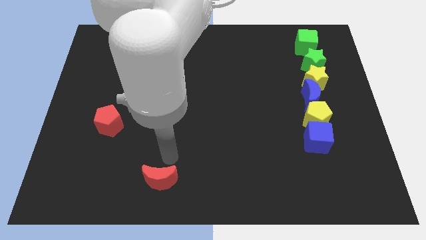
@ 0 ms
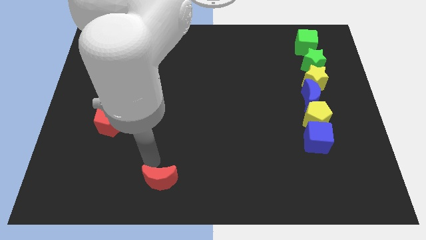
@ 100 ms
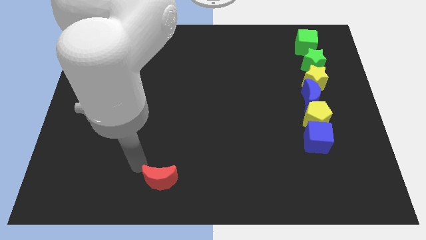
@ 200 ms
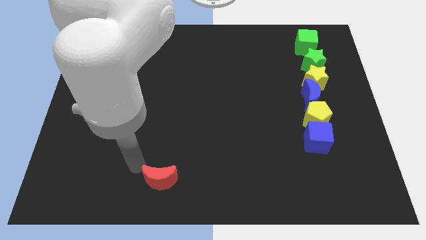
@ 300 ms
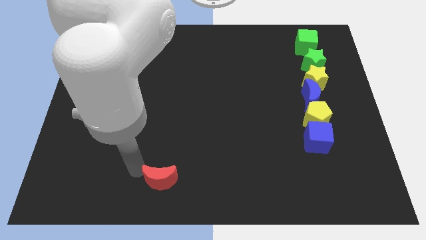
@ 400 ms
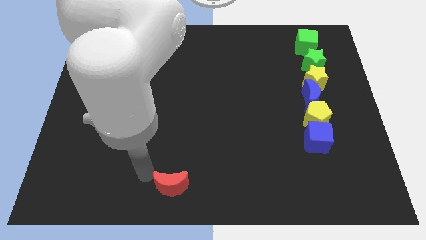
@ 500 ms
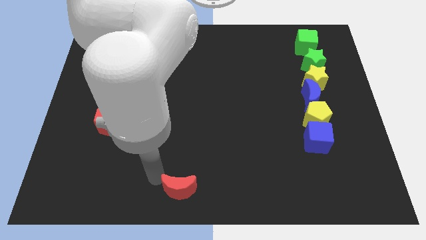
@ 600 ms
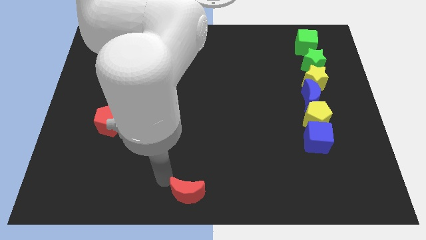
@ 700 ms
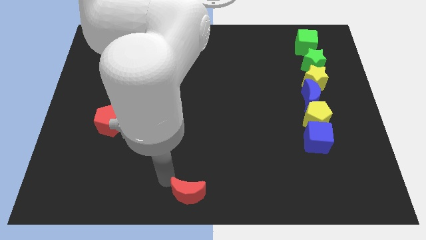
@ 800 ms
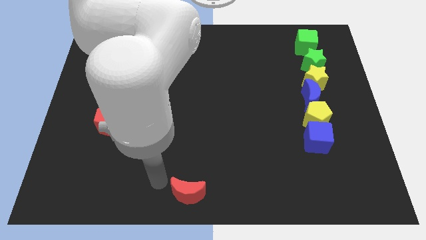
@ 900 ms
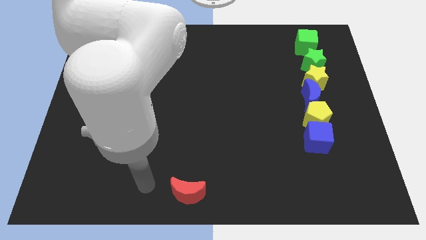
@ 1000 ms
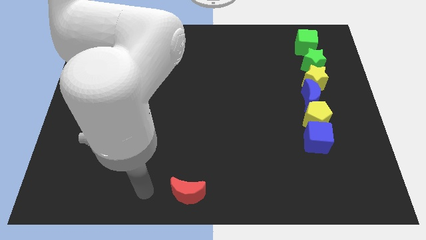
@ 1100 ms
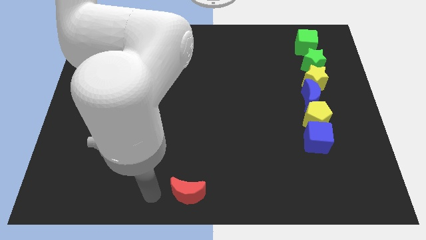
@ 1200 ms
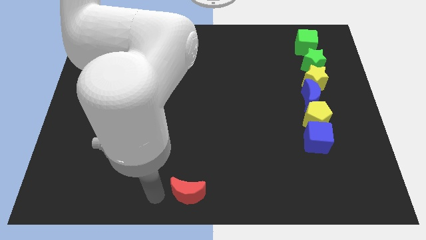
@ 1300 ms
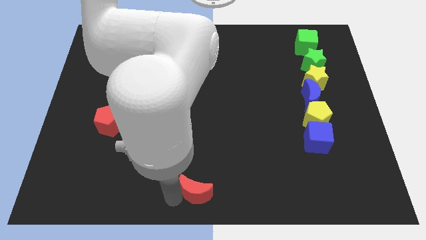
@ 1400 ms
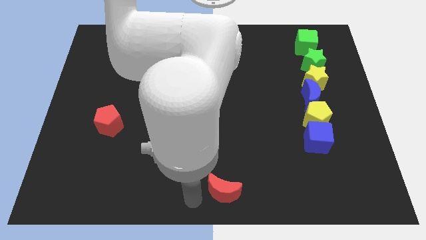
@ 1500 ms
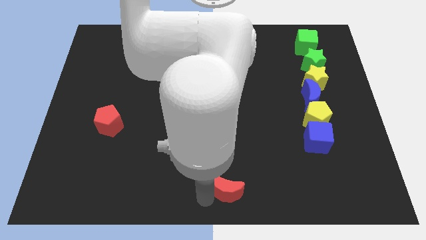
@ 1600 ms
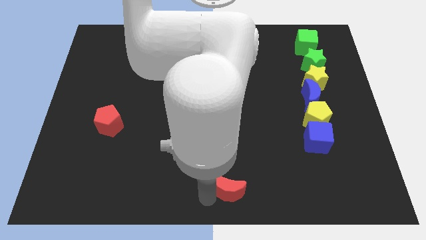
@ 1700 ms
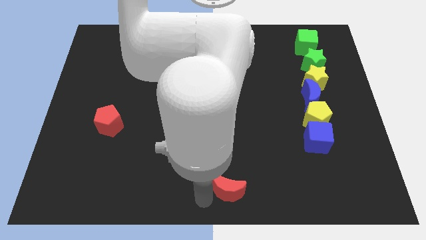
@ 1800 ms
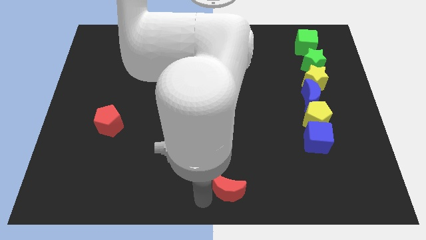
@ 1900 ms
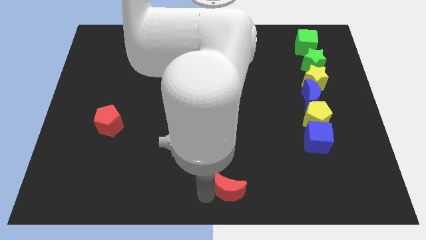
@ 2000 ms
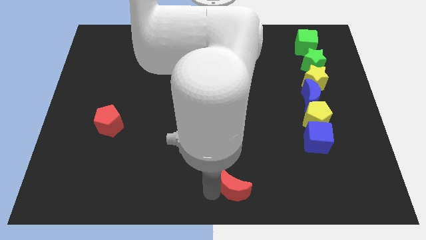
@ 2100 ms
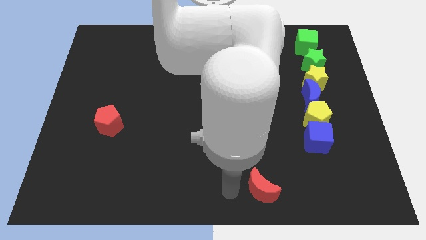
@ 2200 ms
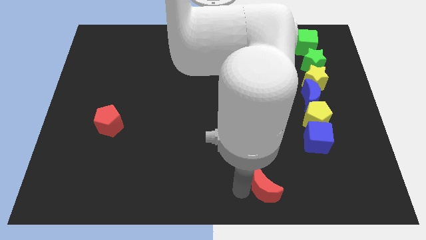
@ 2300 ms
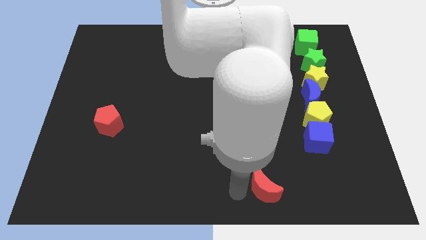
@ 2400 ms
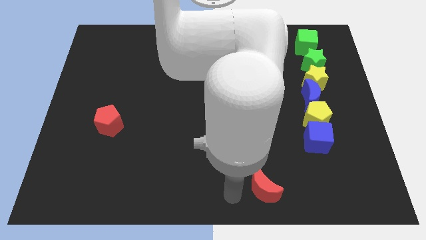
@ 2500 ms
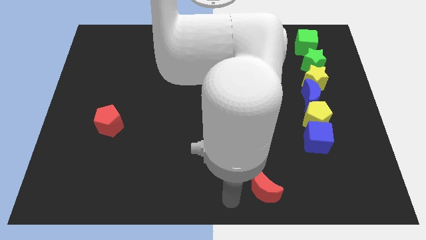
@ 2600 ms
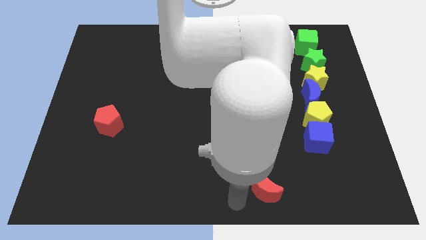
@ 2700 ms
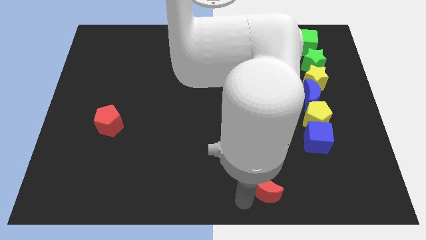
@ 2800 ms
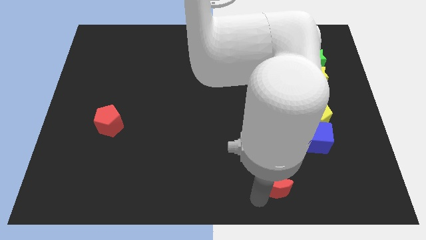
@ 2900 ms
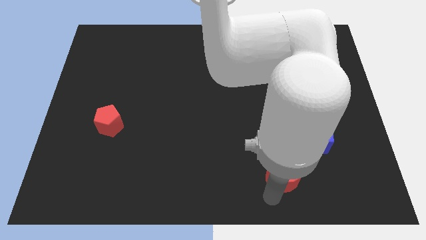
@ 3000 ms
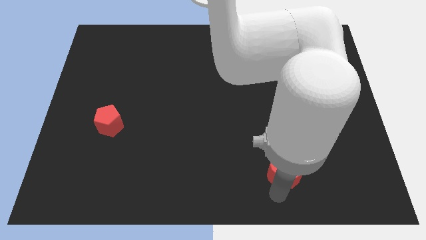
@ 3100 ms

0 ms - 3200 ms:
push the red crescent towards the blue cube

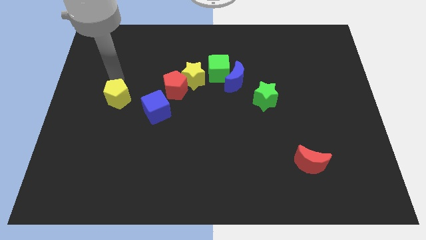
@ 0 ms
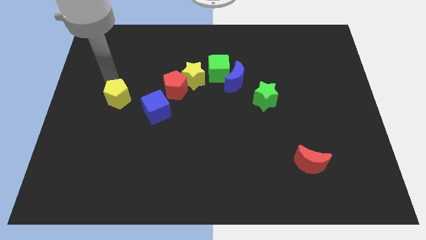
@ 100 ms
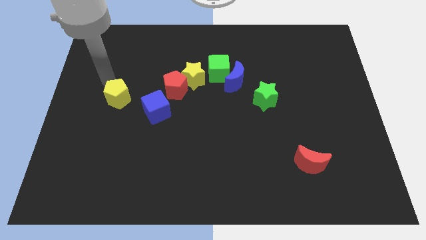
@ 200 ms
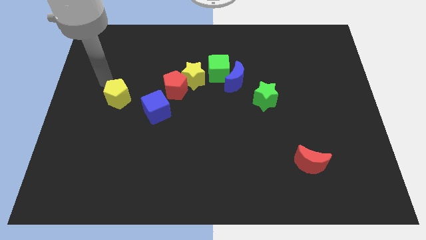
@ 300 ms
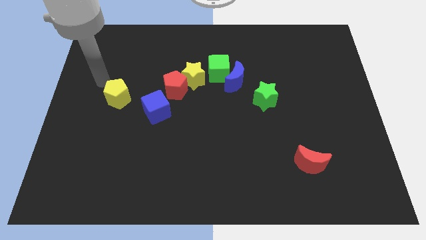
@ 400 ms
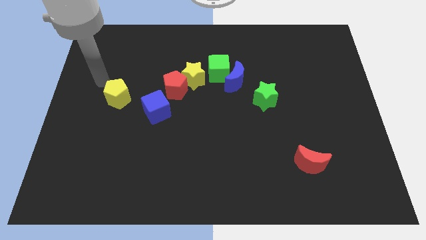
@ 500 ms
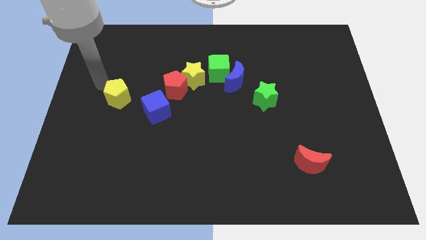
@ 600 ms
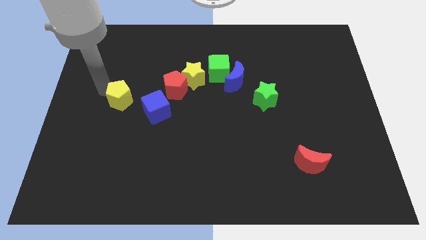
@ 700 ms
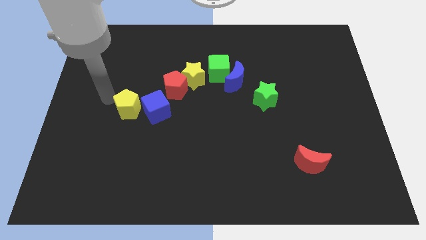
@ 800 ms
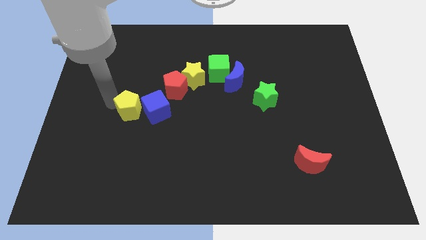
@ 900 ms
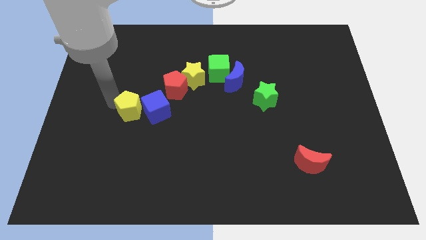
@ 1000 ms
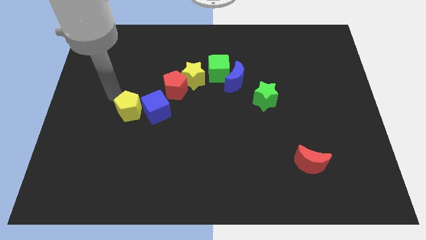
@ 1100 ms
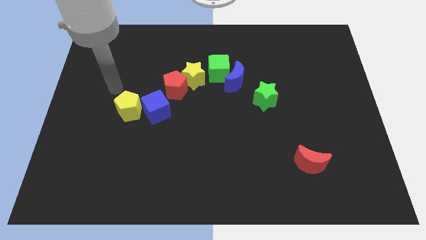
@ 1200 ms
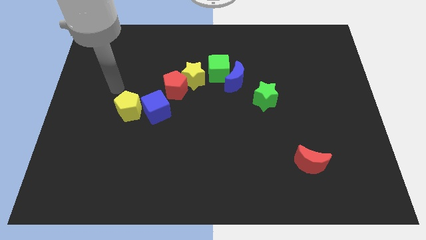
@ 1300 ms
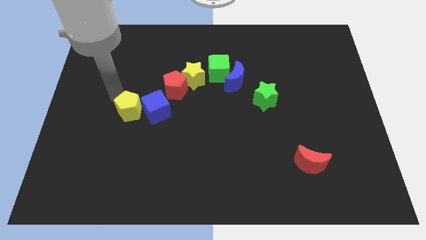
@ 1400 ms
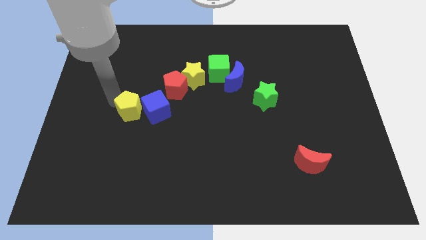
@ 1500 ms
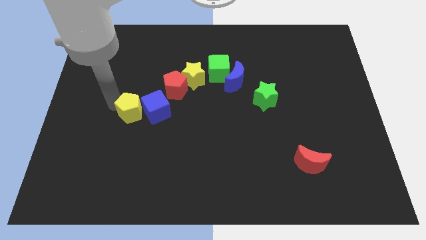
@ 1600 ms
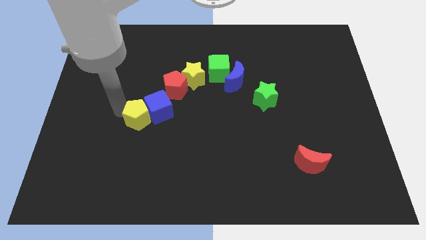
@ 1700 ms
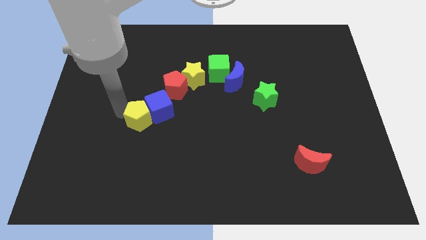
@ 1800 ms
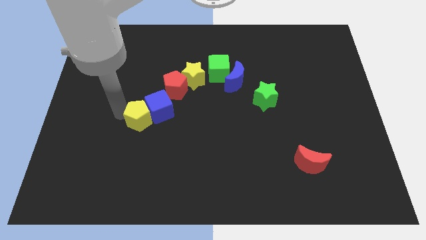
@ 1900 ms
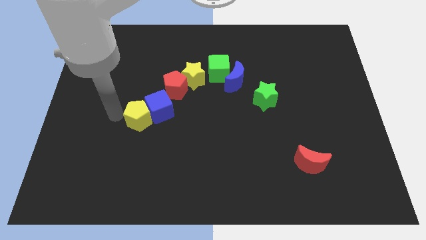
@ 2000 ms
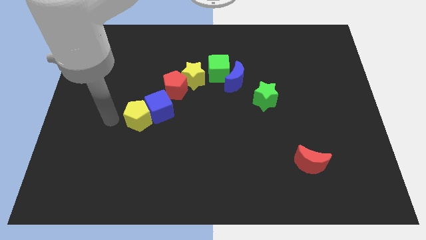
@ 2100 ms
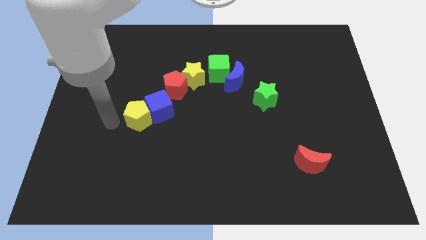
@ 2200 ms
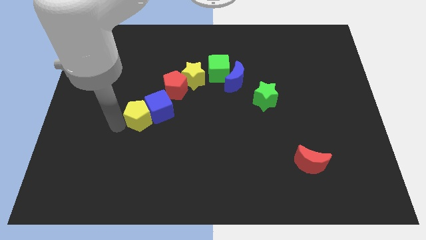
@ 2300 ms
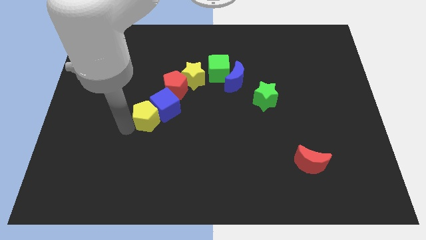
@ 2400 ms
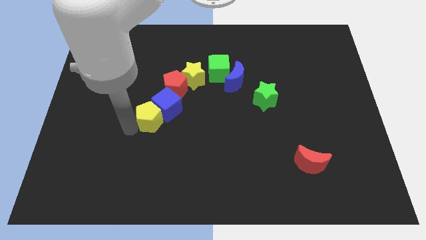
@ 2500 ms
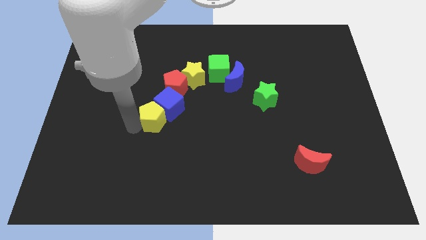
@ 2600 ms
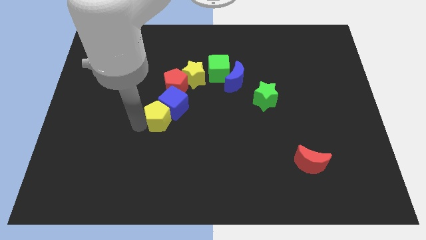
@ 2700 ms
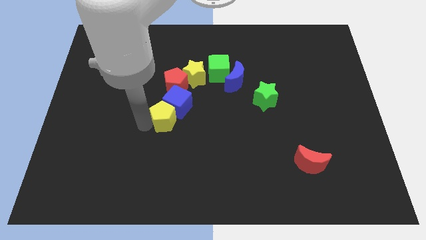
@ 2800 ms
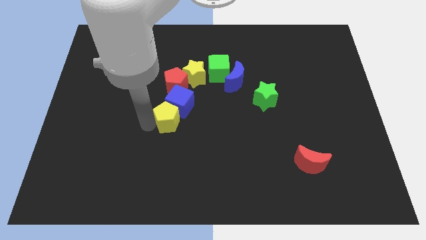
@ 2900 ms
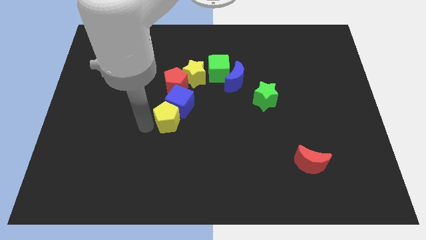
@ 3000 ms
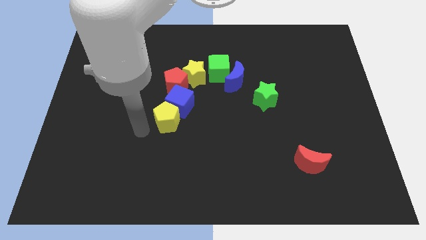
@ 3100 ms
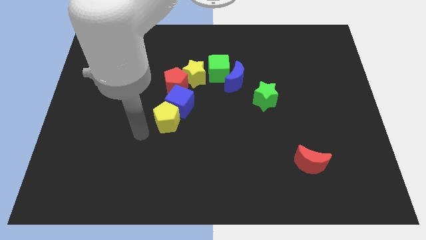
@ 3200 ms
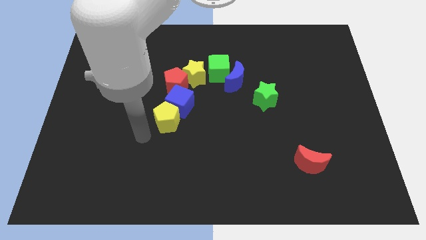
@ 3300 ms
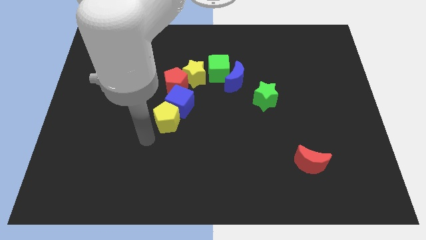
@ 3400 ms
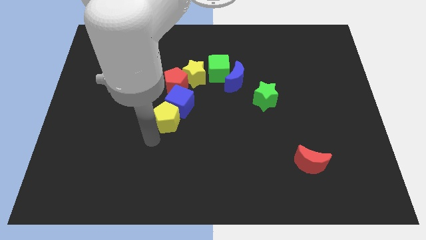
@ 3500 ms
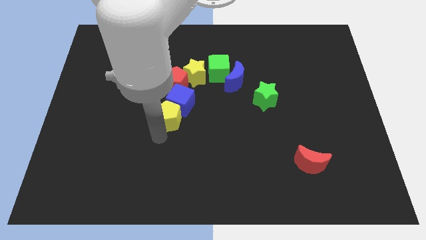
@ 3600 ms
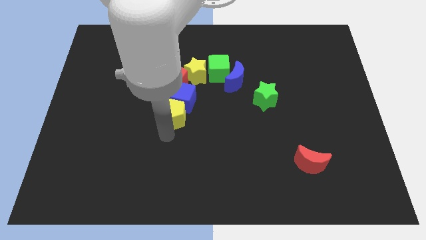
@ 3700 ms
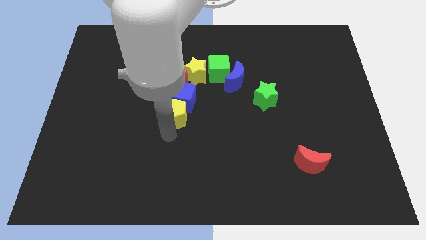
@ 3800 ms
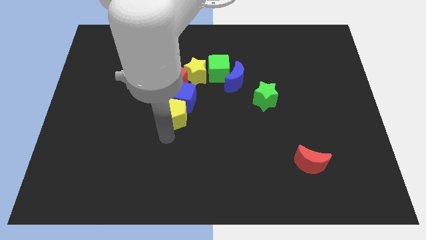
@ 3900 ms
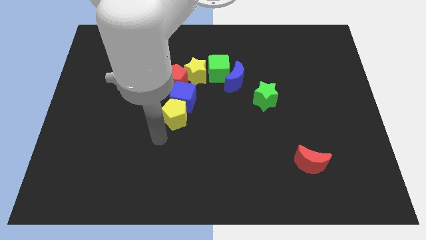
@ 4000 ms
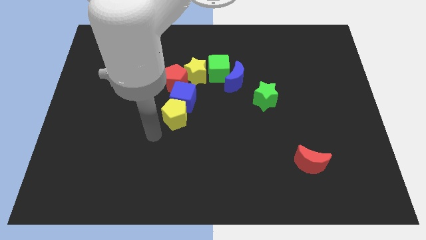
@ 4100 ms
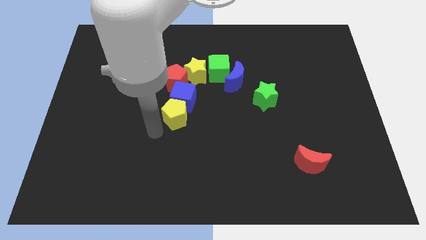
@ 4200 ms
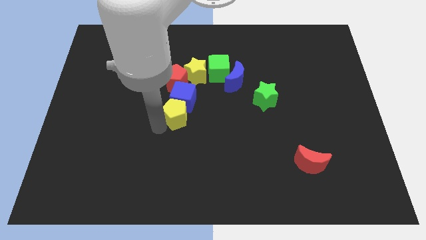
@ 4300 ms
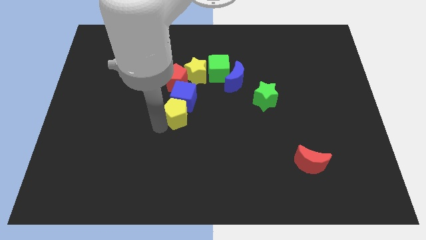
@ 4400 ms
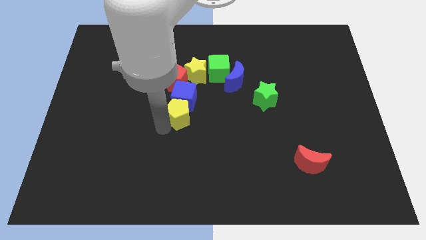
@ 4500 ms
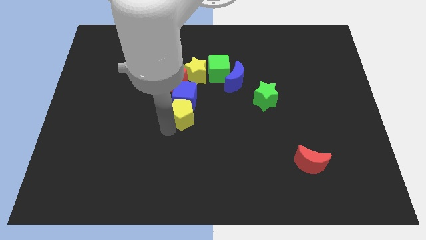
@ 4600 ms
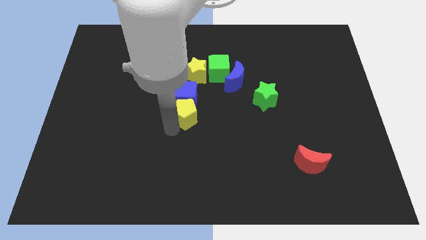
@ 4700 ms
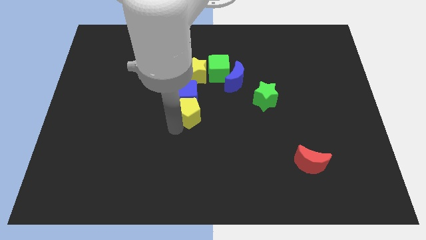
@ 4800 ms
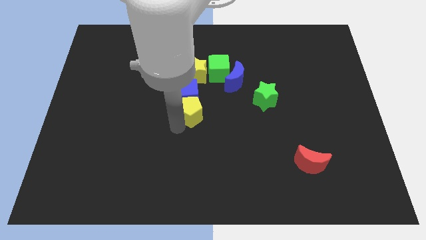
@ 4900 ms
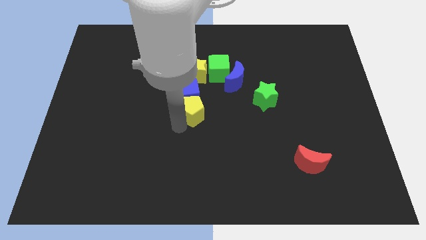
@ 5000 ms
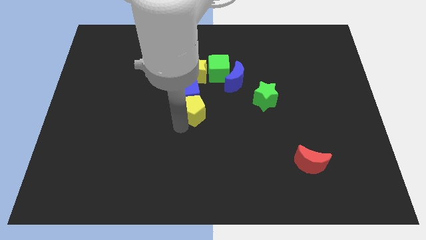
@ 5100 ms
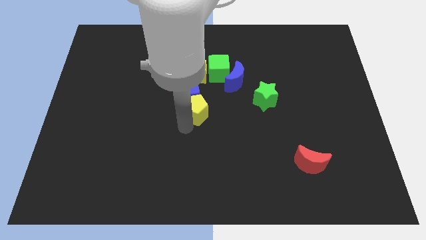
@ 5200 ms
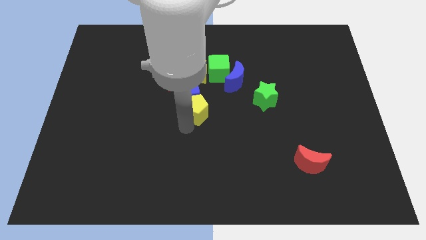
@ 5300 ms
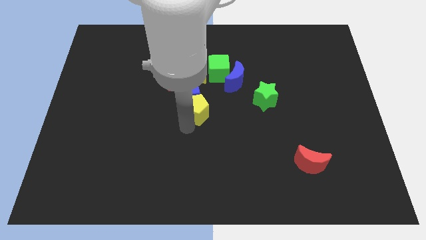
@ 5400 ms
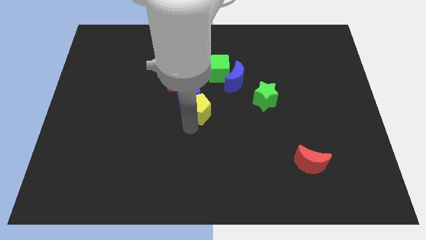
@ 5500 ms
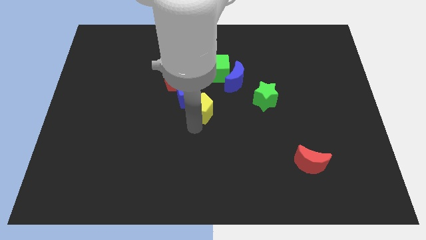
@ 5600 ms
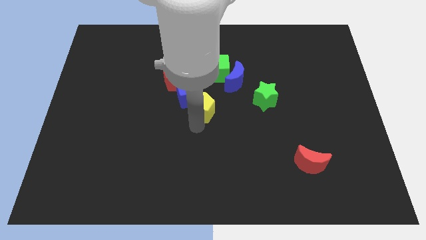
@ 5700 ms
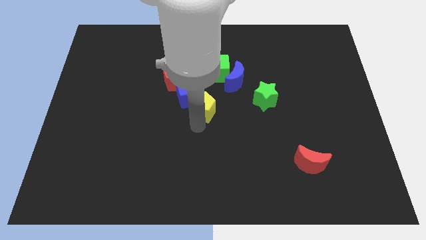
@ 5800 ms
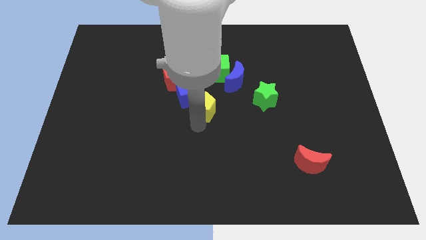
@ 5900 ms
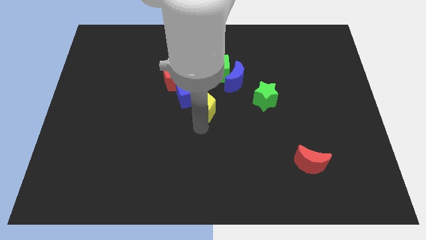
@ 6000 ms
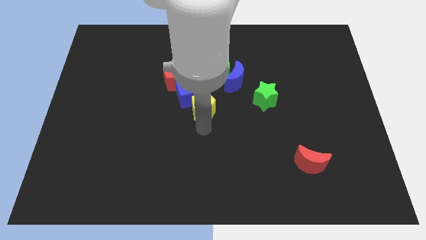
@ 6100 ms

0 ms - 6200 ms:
put the yellow pentagon at the center of the board
